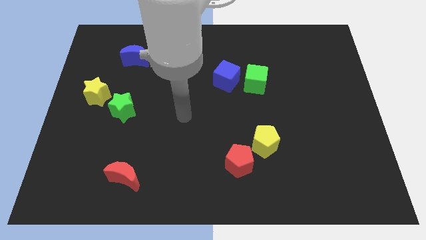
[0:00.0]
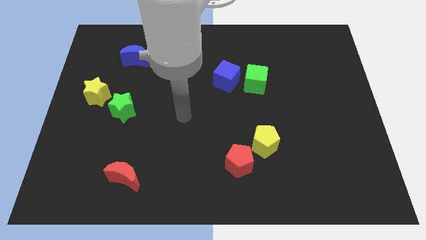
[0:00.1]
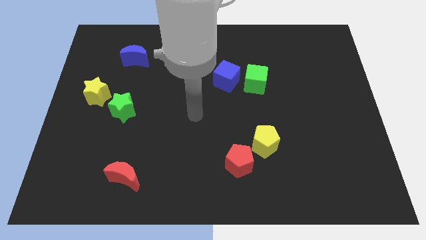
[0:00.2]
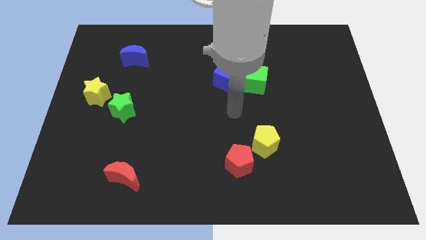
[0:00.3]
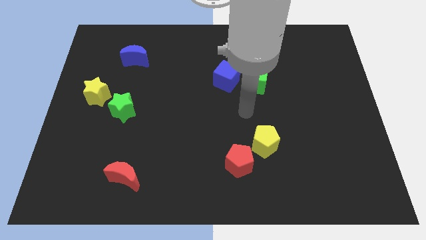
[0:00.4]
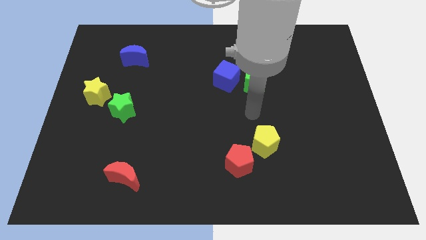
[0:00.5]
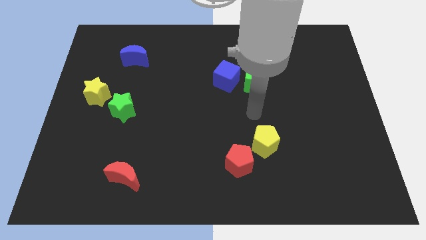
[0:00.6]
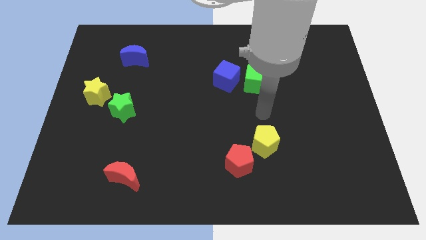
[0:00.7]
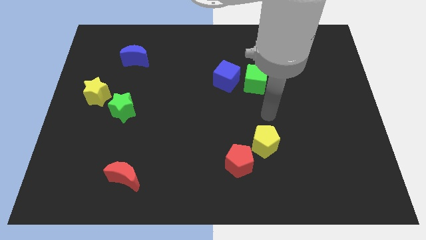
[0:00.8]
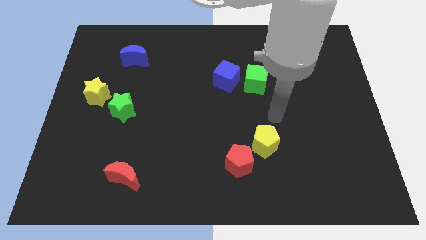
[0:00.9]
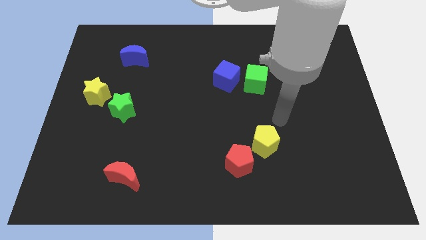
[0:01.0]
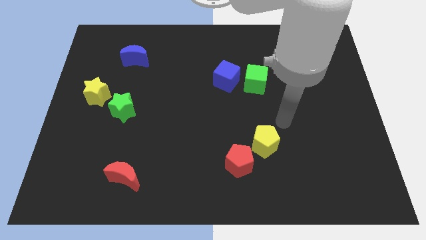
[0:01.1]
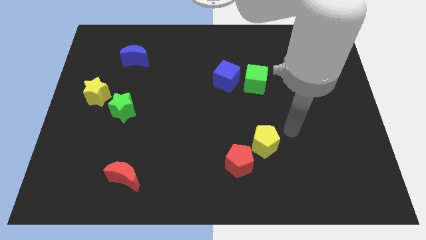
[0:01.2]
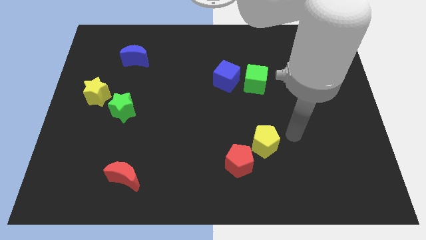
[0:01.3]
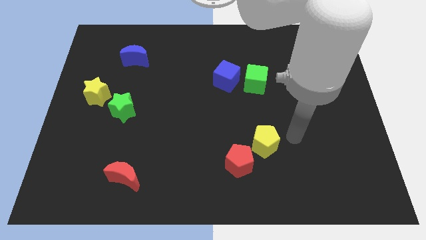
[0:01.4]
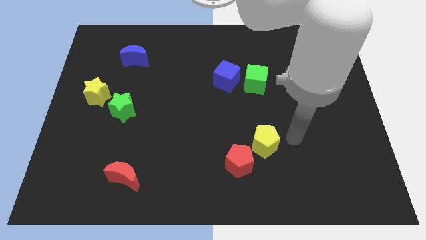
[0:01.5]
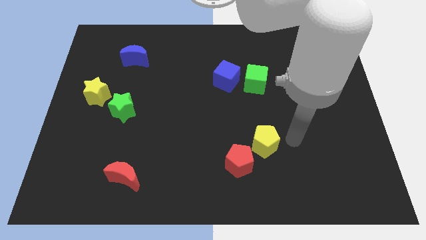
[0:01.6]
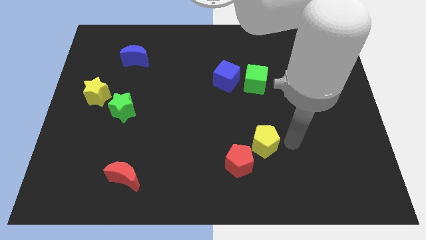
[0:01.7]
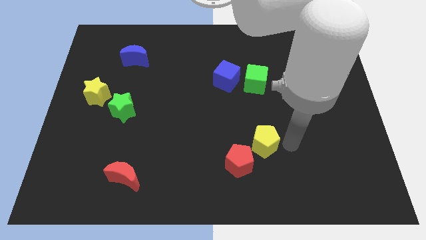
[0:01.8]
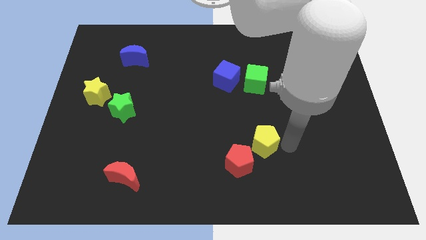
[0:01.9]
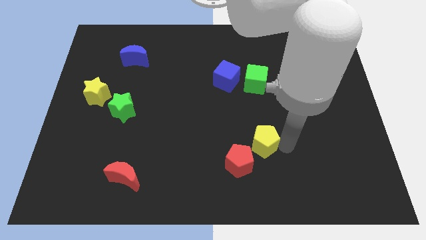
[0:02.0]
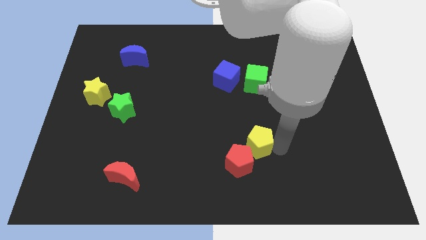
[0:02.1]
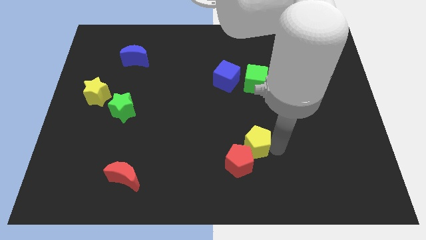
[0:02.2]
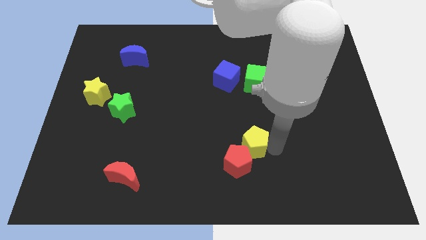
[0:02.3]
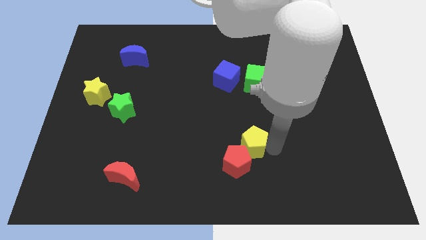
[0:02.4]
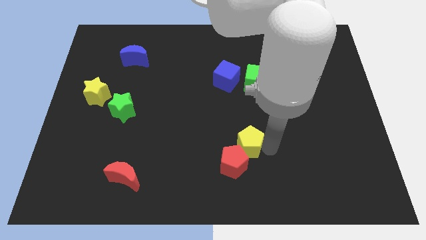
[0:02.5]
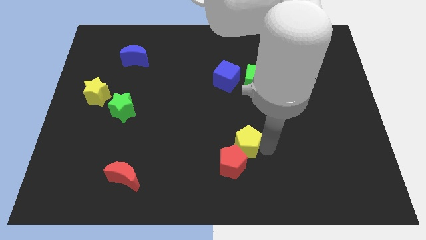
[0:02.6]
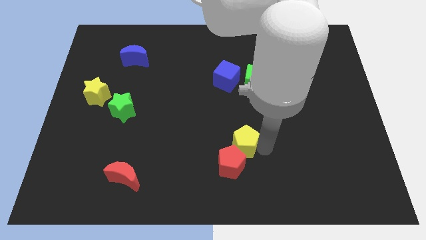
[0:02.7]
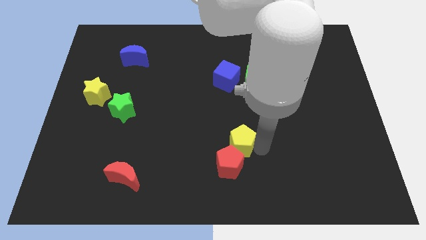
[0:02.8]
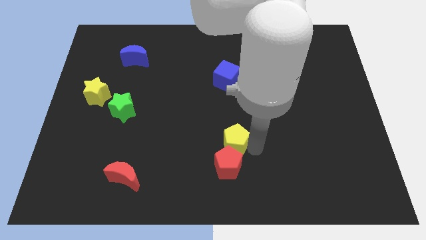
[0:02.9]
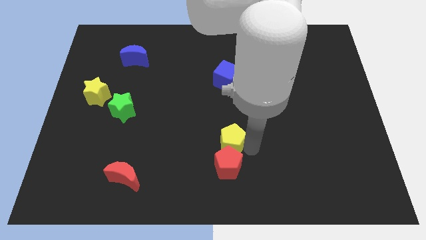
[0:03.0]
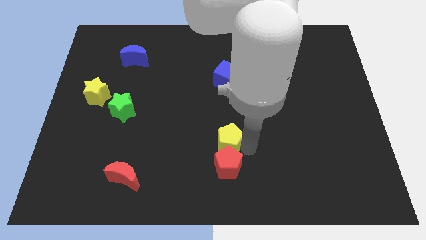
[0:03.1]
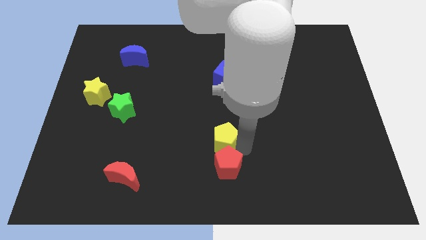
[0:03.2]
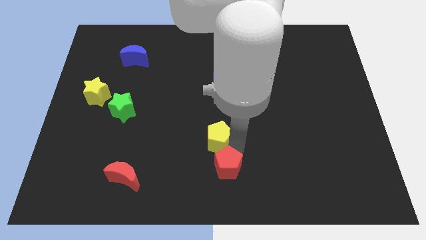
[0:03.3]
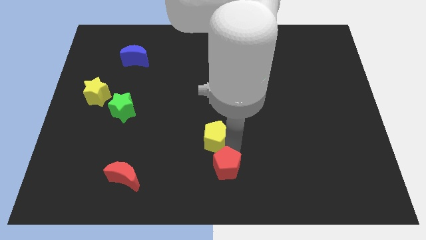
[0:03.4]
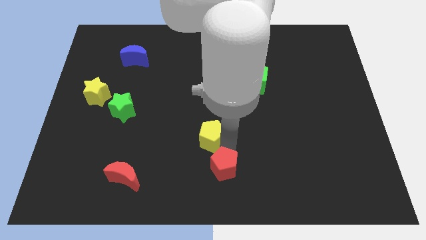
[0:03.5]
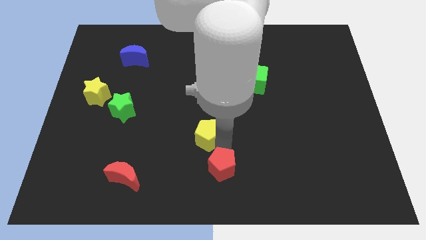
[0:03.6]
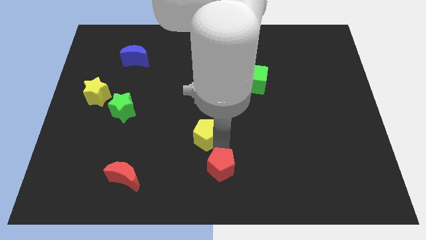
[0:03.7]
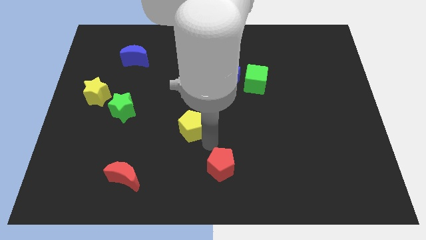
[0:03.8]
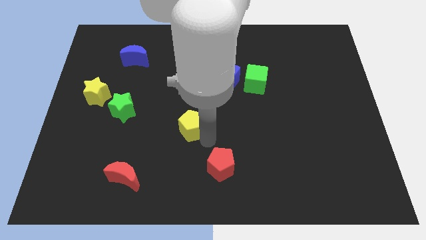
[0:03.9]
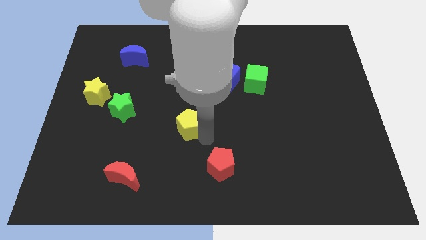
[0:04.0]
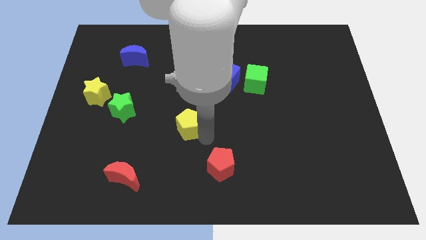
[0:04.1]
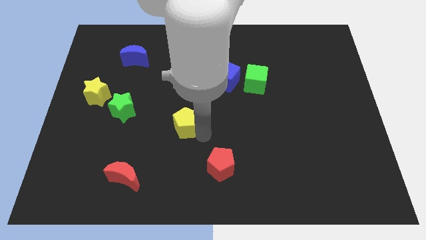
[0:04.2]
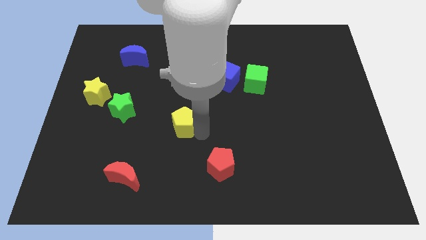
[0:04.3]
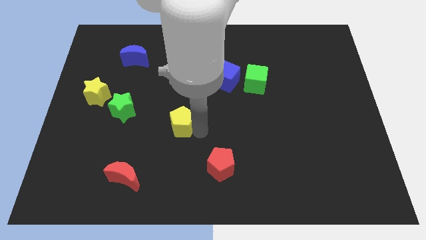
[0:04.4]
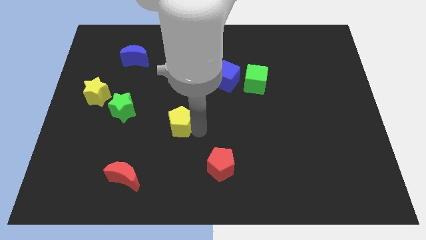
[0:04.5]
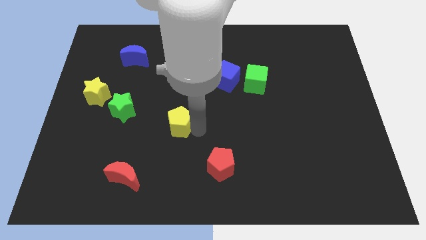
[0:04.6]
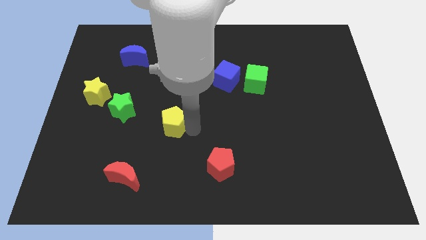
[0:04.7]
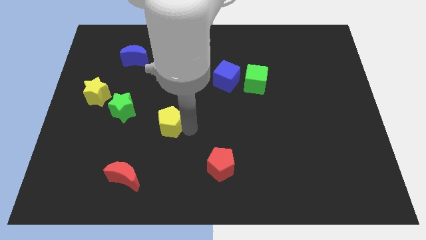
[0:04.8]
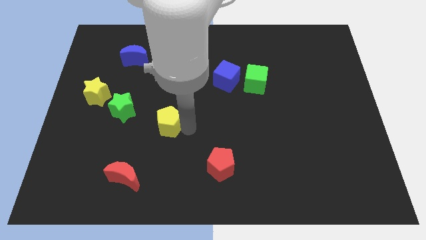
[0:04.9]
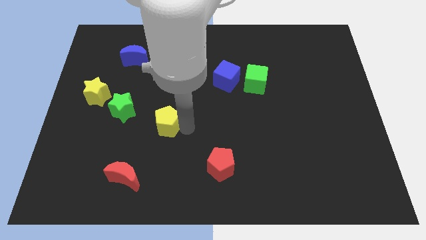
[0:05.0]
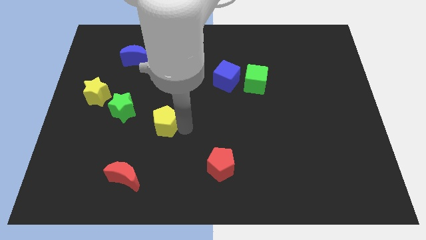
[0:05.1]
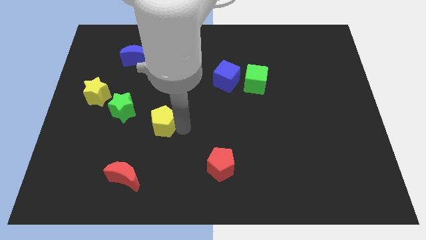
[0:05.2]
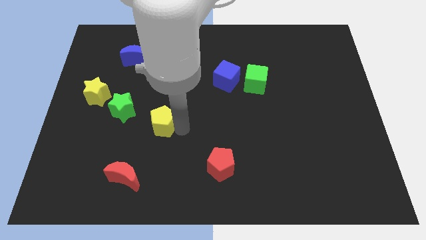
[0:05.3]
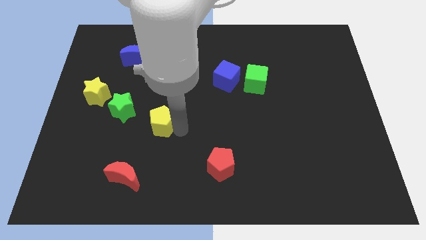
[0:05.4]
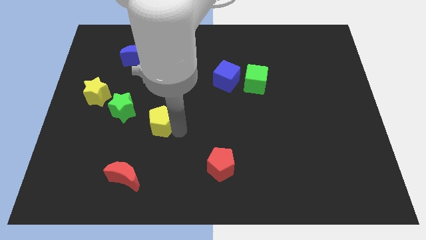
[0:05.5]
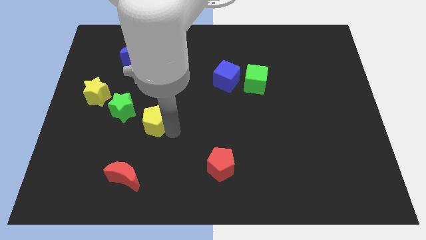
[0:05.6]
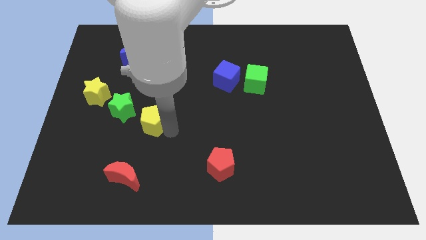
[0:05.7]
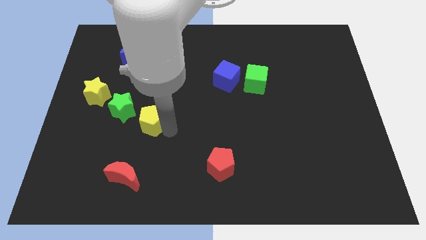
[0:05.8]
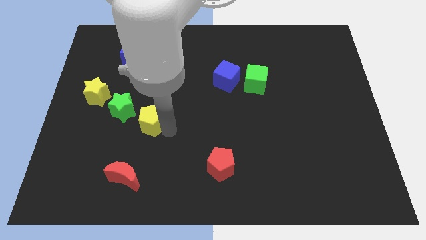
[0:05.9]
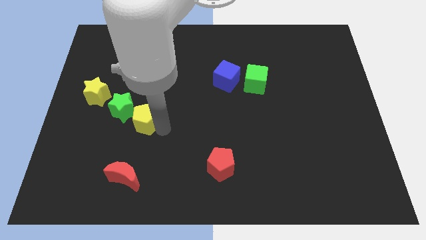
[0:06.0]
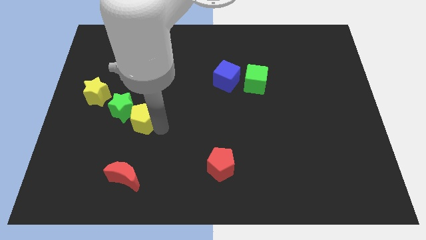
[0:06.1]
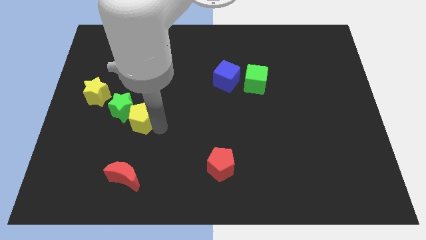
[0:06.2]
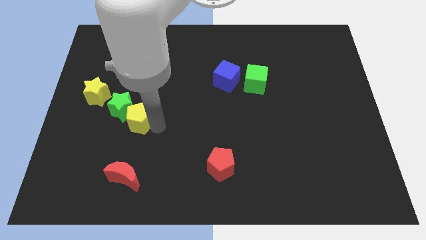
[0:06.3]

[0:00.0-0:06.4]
push the yellow pentagon towards the green star

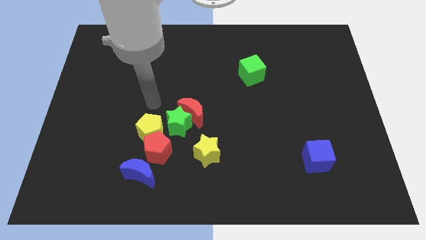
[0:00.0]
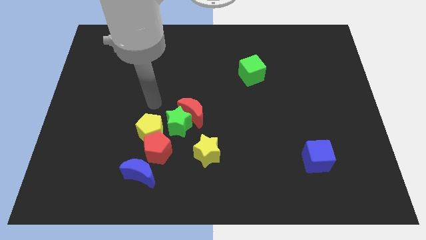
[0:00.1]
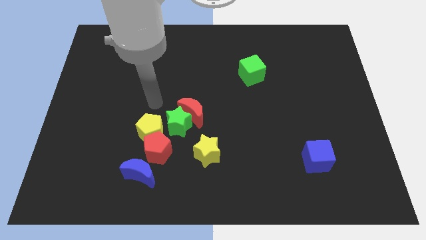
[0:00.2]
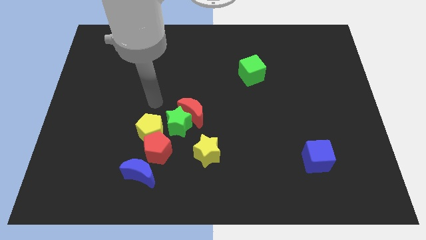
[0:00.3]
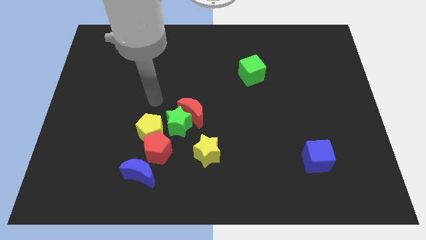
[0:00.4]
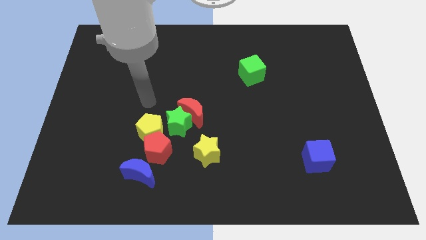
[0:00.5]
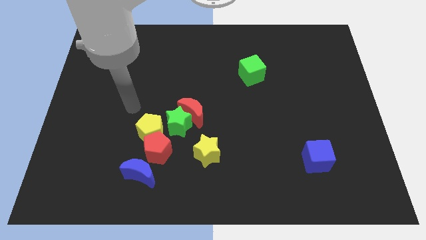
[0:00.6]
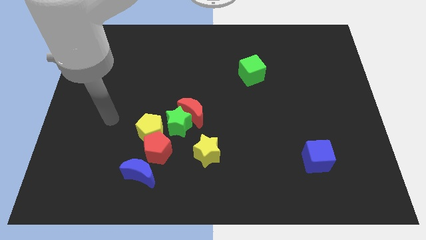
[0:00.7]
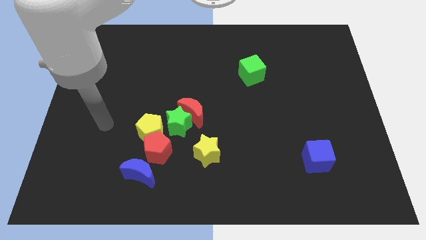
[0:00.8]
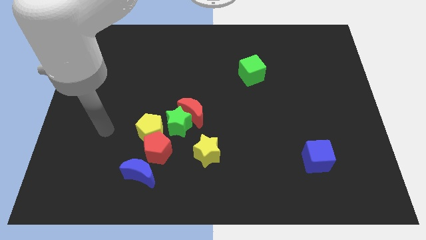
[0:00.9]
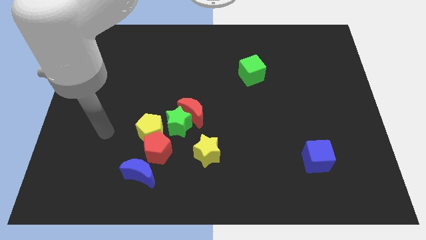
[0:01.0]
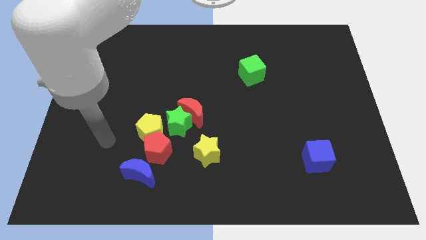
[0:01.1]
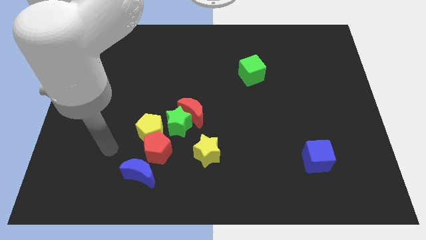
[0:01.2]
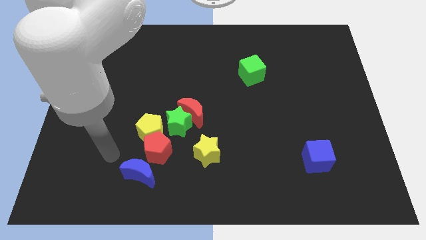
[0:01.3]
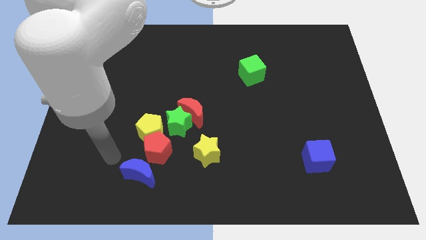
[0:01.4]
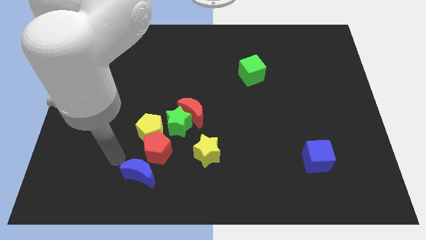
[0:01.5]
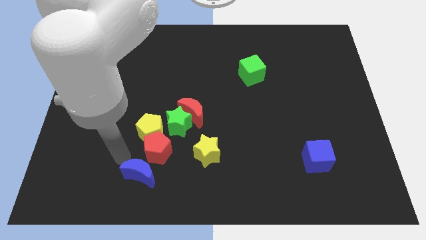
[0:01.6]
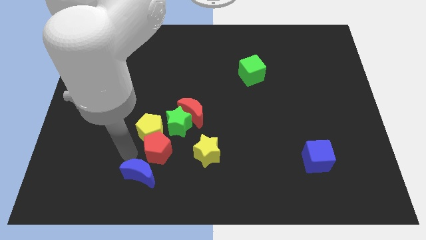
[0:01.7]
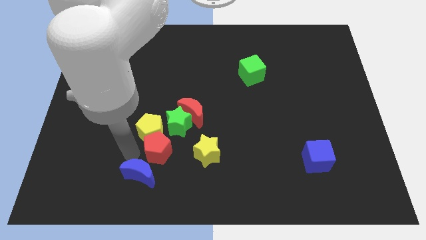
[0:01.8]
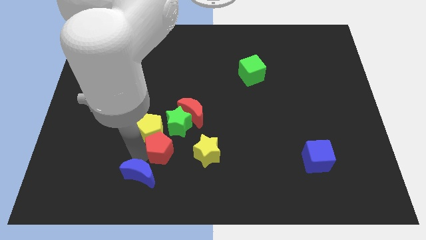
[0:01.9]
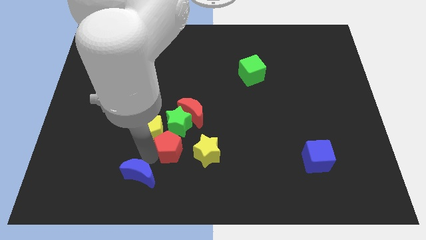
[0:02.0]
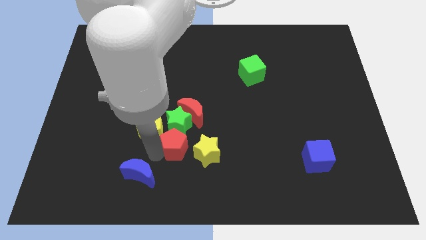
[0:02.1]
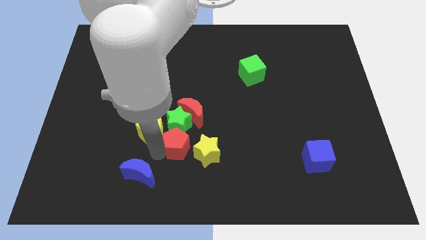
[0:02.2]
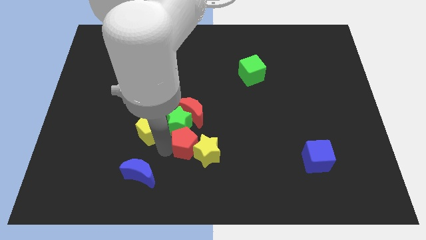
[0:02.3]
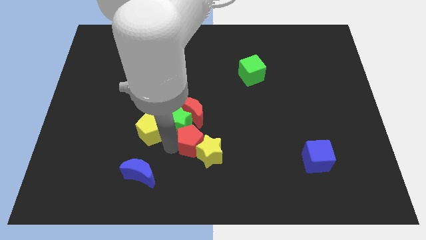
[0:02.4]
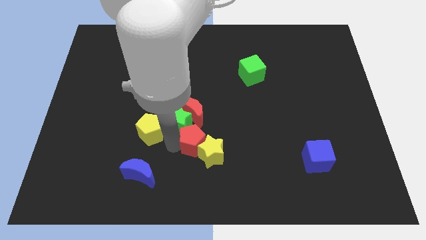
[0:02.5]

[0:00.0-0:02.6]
move the red pentagon close to the yellow star
